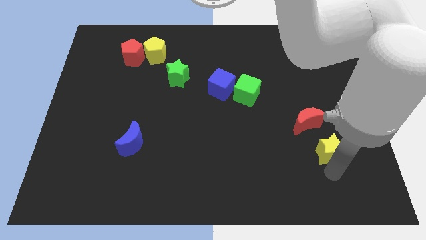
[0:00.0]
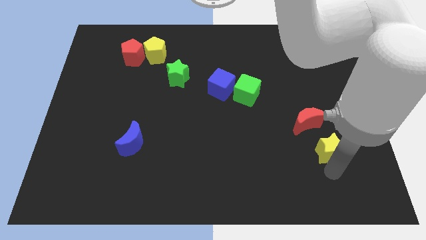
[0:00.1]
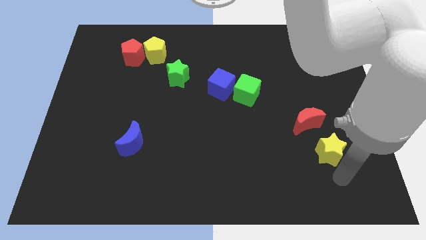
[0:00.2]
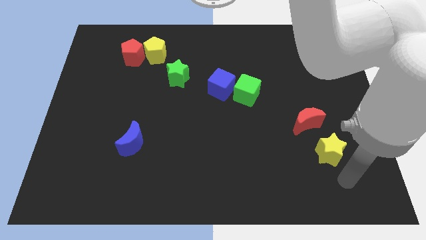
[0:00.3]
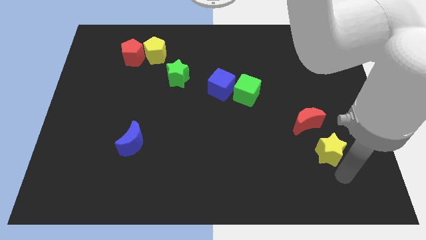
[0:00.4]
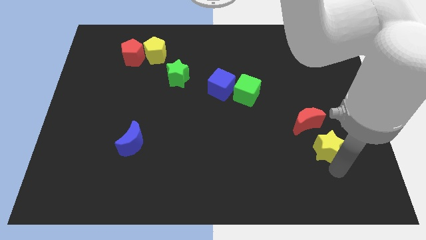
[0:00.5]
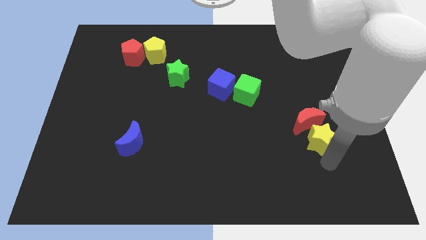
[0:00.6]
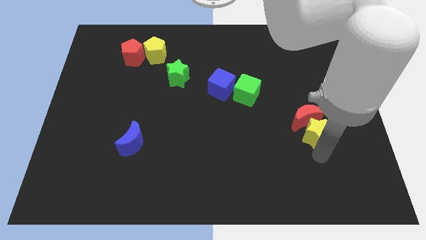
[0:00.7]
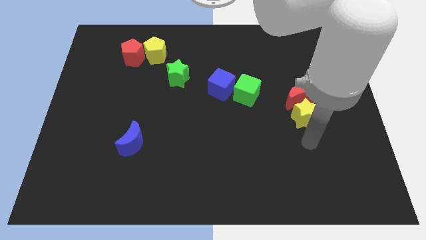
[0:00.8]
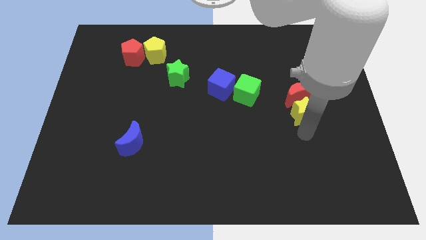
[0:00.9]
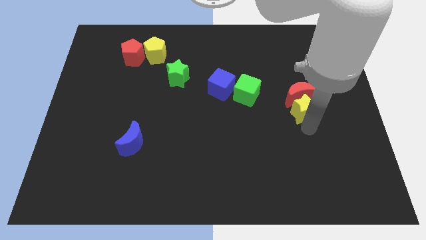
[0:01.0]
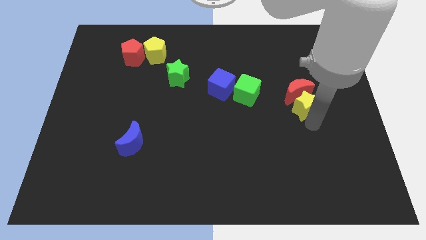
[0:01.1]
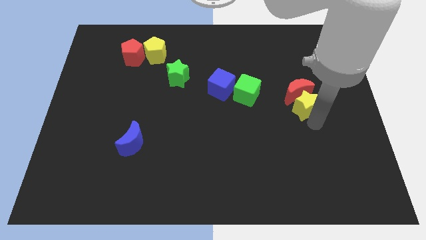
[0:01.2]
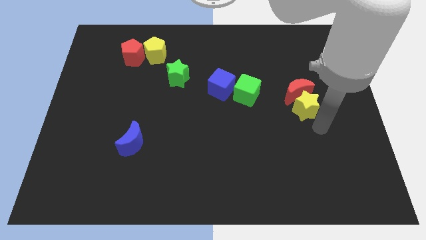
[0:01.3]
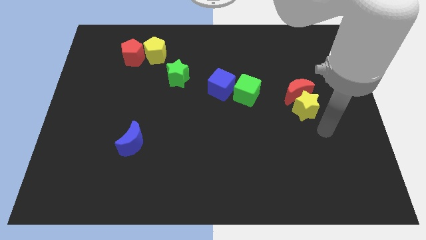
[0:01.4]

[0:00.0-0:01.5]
push the yellow star into the red crescent

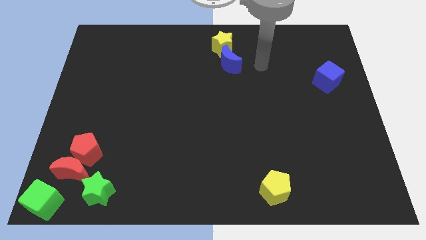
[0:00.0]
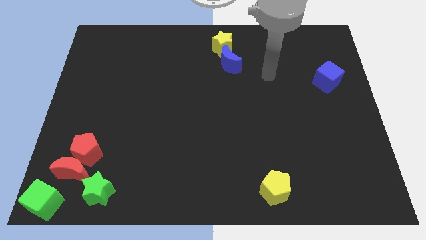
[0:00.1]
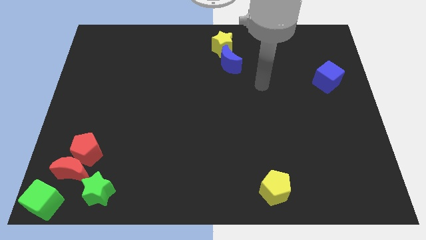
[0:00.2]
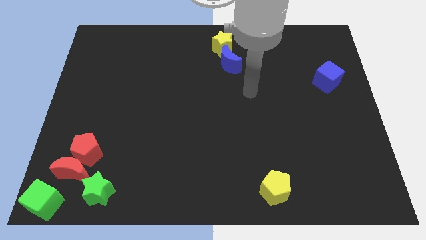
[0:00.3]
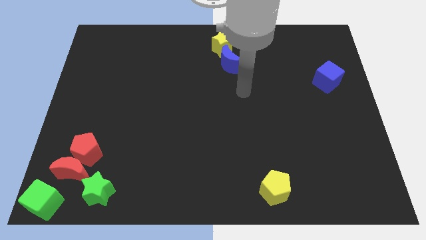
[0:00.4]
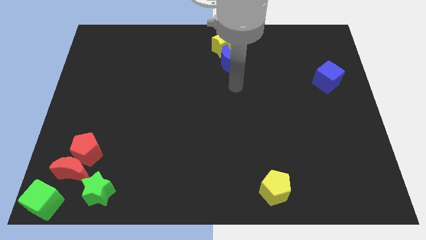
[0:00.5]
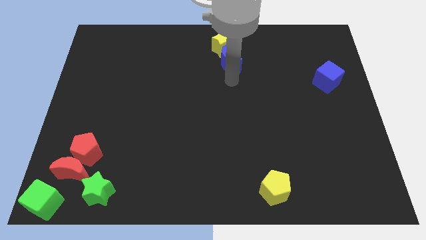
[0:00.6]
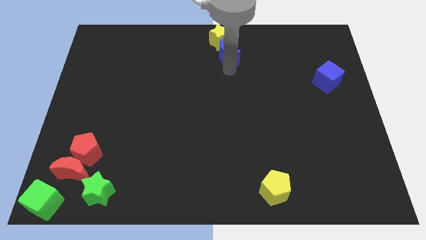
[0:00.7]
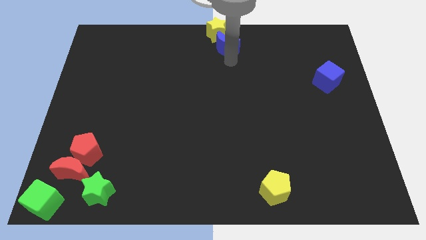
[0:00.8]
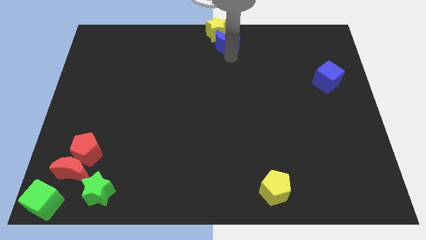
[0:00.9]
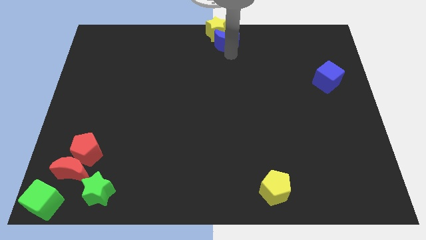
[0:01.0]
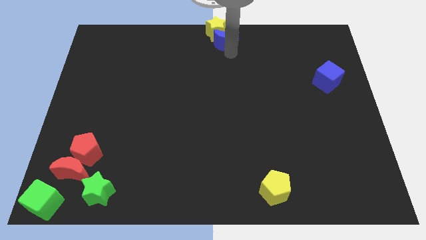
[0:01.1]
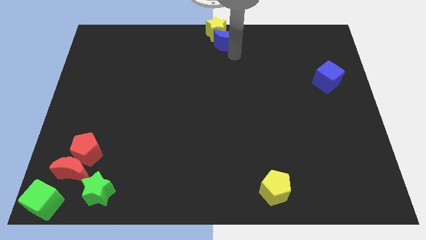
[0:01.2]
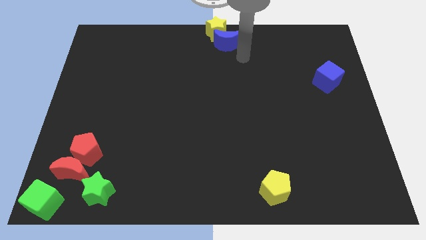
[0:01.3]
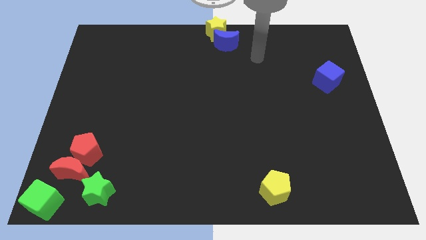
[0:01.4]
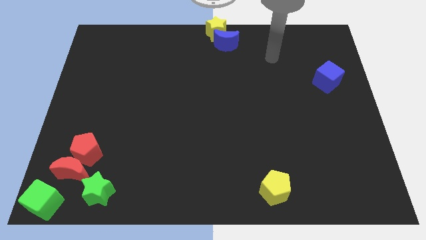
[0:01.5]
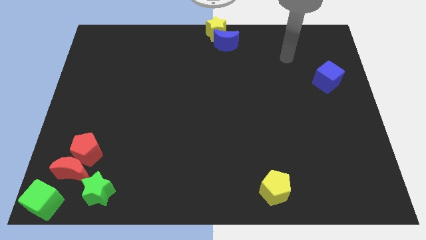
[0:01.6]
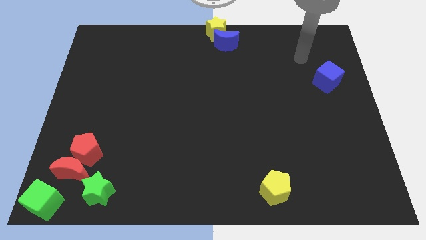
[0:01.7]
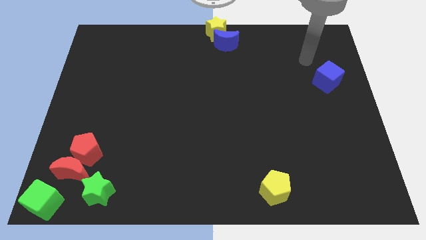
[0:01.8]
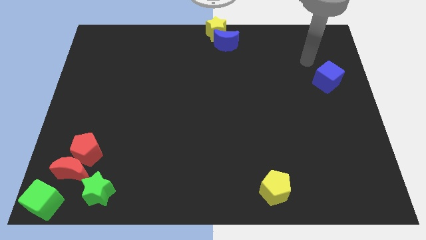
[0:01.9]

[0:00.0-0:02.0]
push the blue moon along with the yellow star to the top center of the board

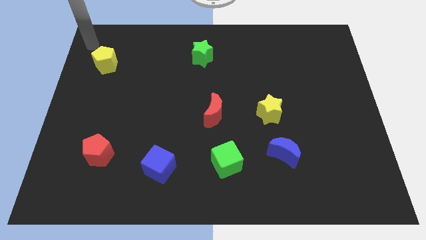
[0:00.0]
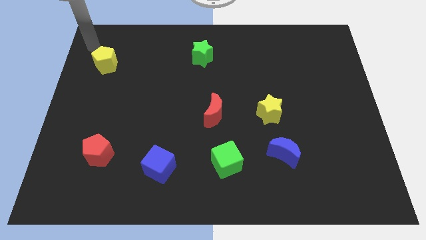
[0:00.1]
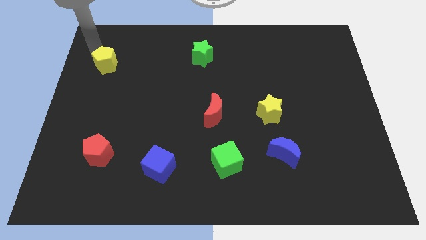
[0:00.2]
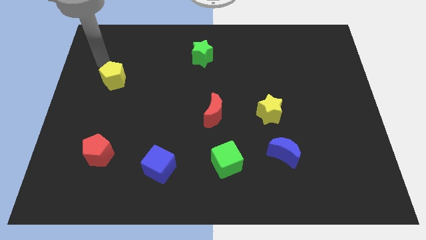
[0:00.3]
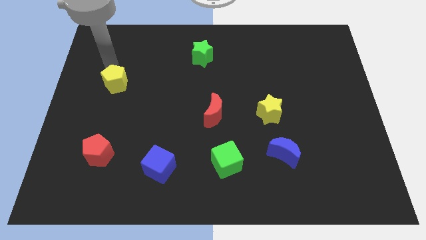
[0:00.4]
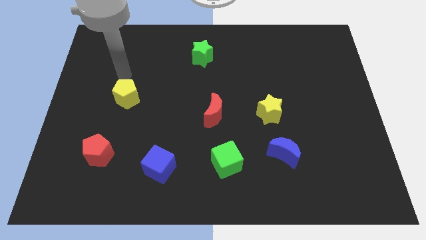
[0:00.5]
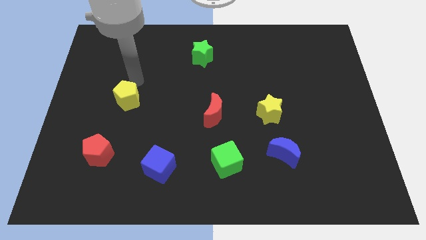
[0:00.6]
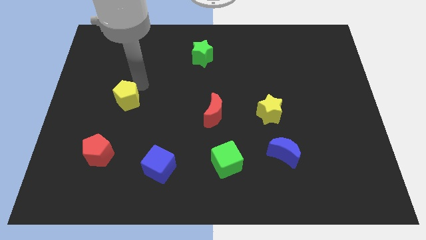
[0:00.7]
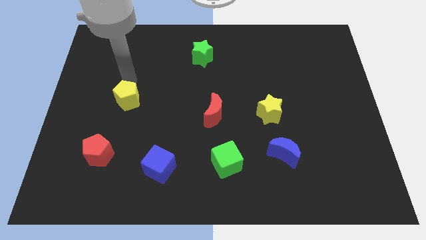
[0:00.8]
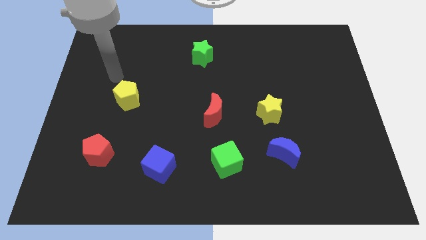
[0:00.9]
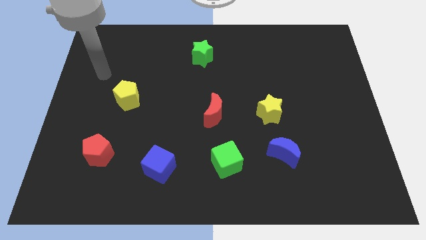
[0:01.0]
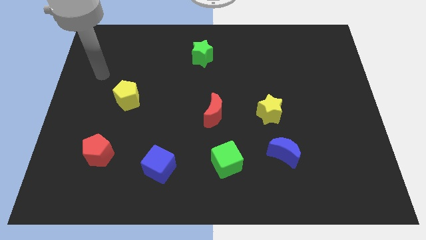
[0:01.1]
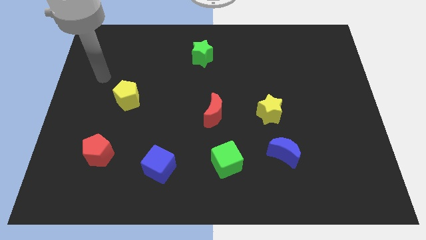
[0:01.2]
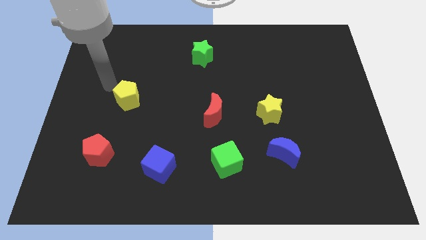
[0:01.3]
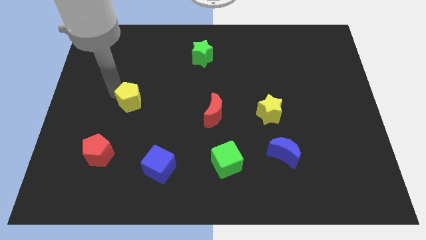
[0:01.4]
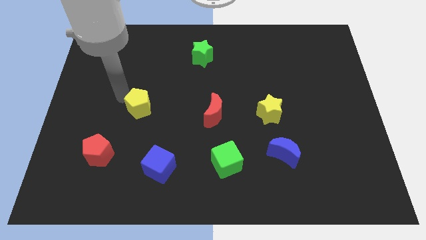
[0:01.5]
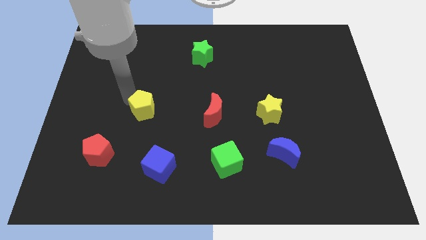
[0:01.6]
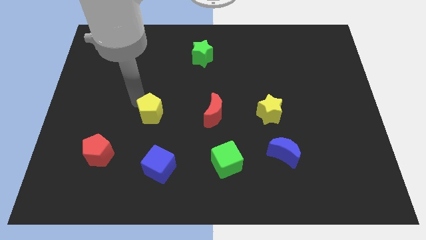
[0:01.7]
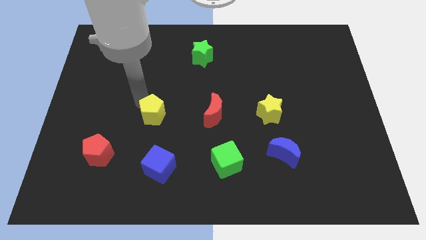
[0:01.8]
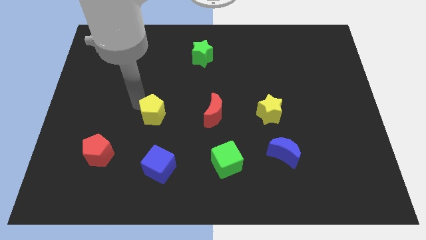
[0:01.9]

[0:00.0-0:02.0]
place the yellow pentagon to the left of the red moon

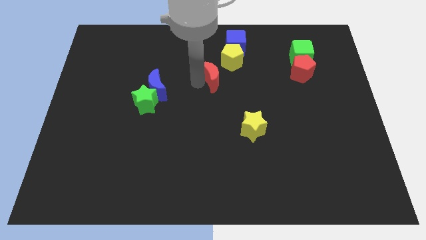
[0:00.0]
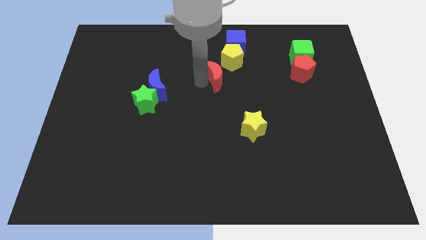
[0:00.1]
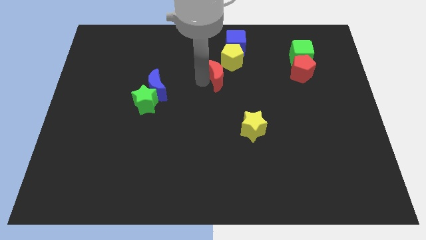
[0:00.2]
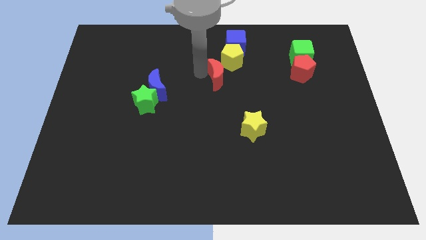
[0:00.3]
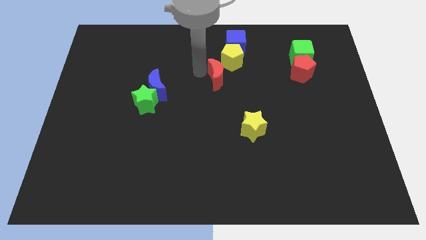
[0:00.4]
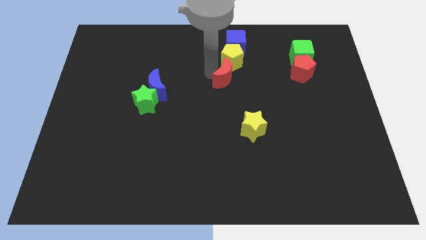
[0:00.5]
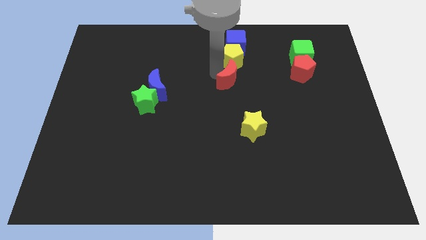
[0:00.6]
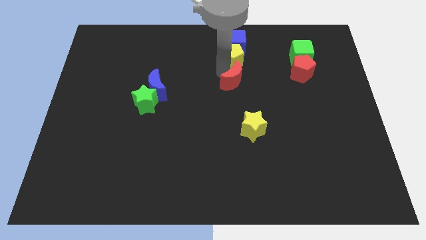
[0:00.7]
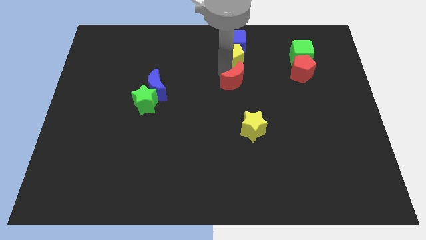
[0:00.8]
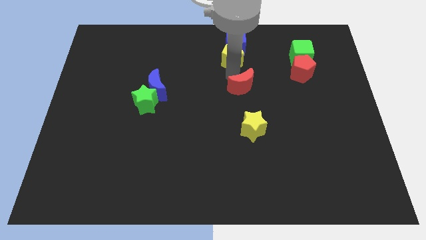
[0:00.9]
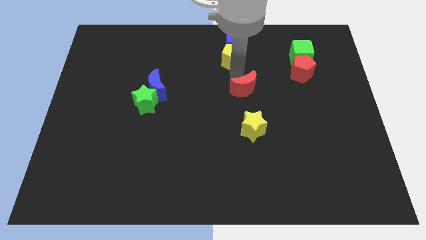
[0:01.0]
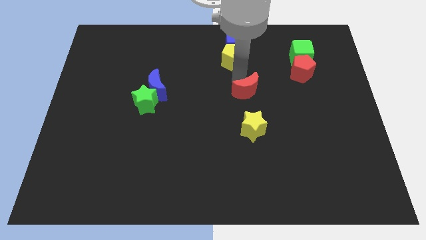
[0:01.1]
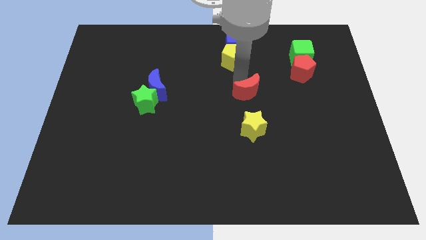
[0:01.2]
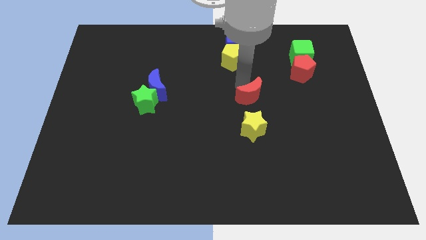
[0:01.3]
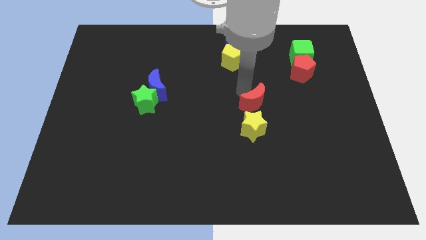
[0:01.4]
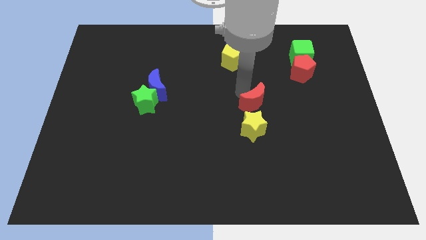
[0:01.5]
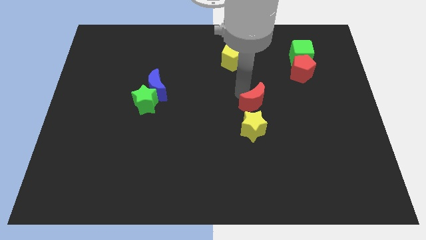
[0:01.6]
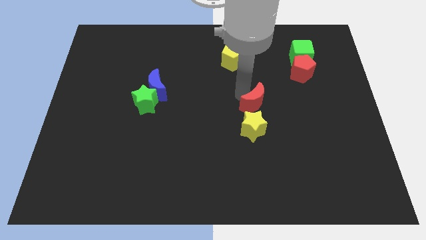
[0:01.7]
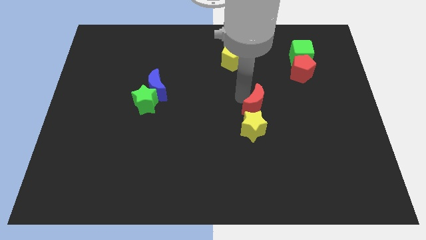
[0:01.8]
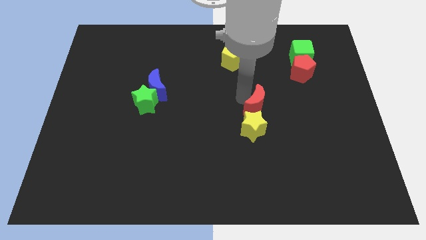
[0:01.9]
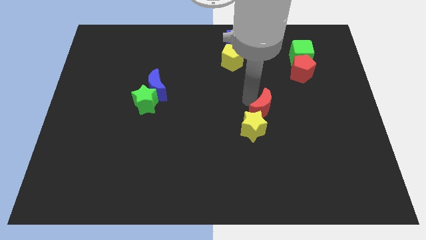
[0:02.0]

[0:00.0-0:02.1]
move red moon above the yellow star

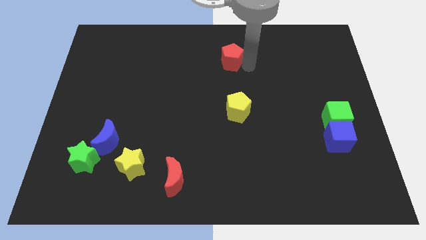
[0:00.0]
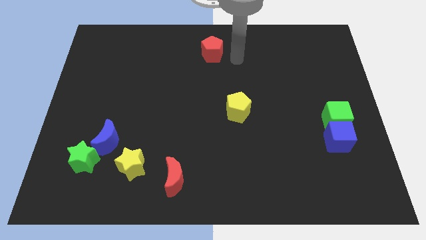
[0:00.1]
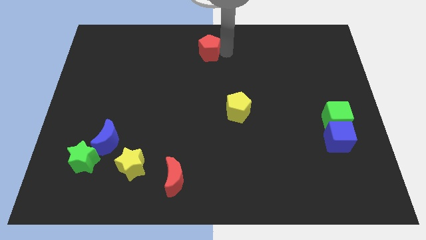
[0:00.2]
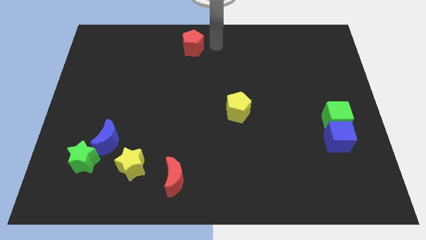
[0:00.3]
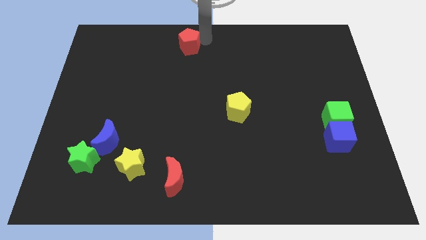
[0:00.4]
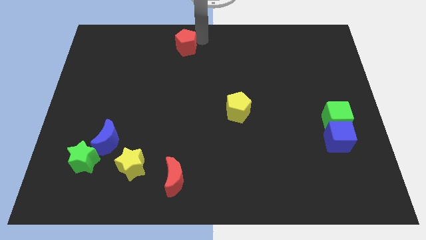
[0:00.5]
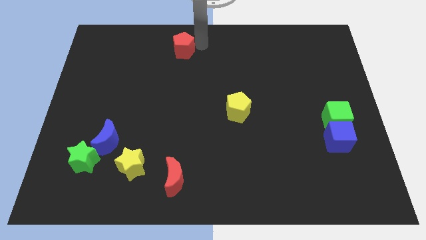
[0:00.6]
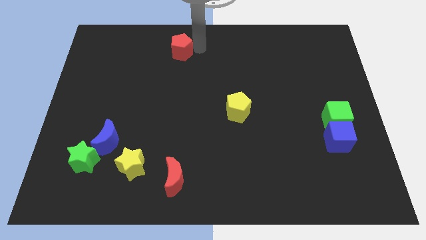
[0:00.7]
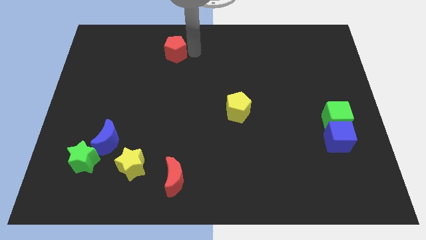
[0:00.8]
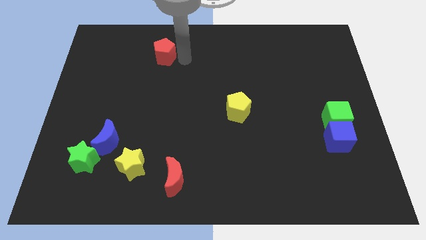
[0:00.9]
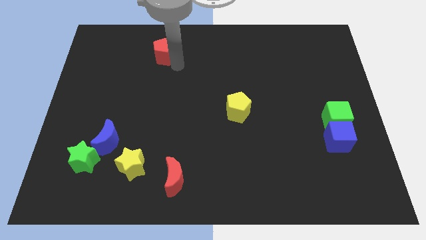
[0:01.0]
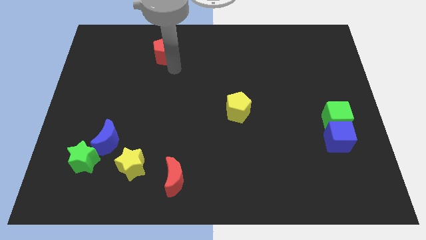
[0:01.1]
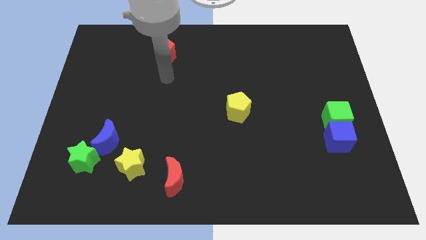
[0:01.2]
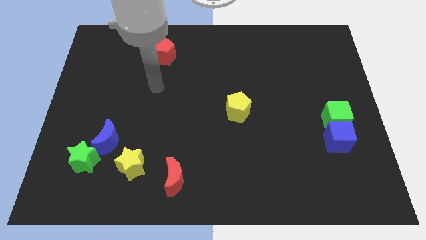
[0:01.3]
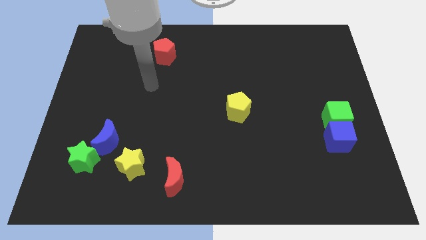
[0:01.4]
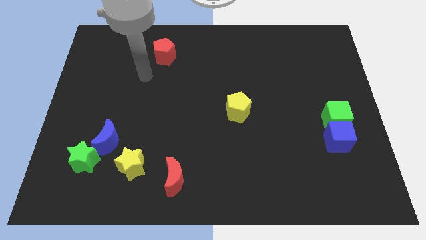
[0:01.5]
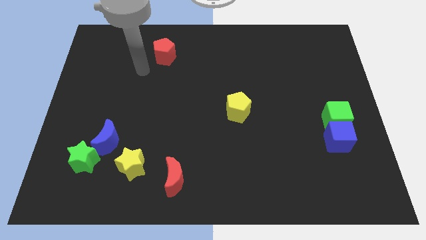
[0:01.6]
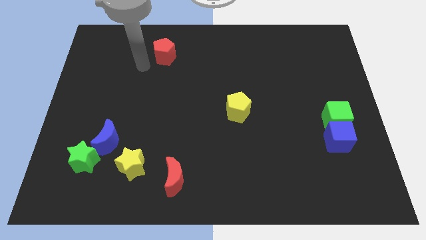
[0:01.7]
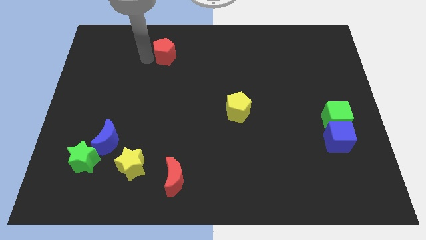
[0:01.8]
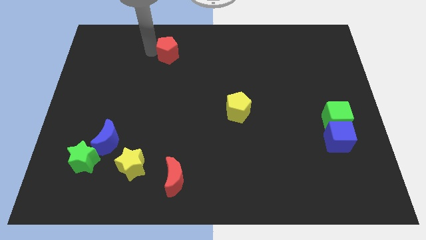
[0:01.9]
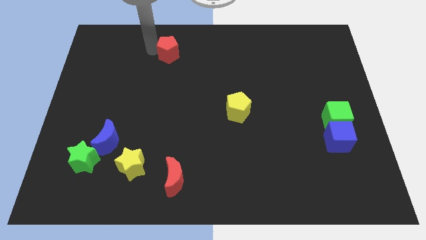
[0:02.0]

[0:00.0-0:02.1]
move the red pentagon diagonally to the yellow pentagon
